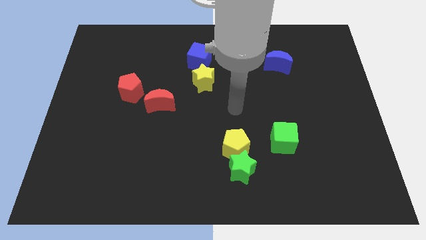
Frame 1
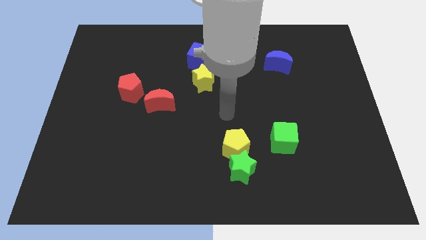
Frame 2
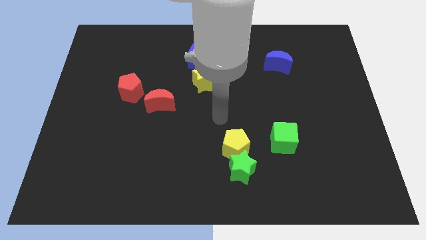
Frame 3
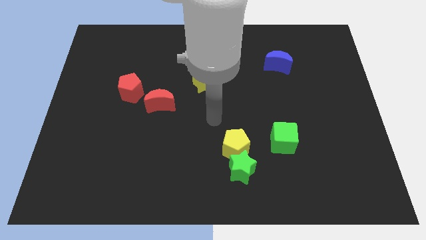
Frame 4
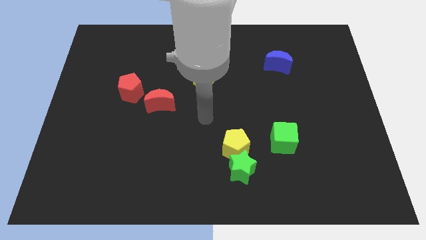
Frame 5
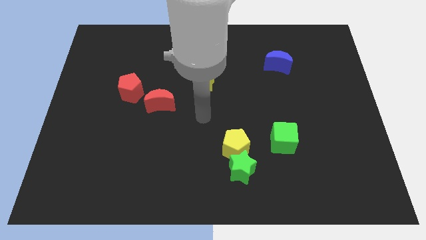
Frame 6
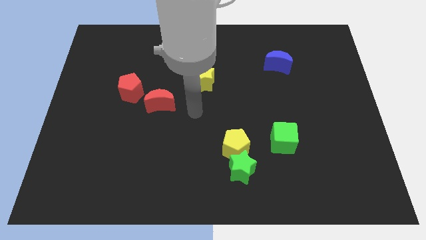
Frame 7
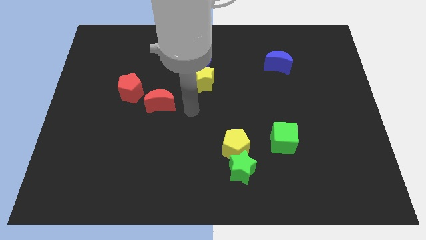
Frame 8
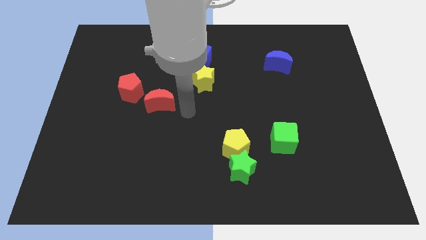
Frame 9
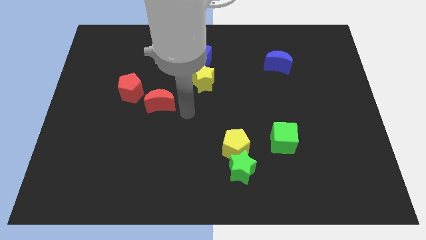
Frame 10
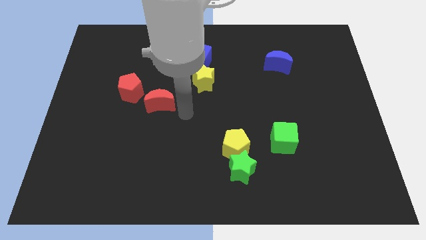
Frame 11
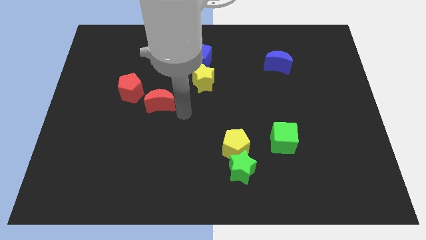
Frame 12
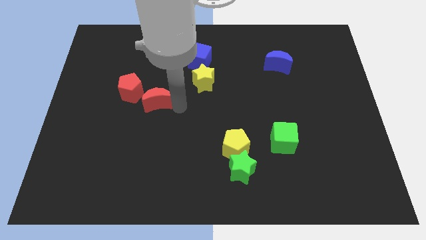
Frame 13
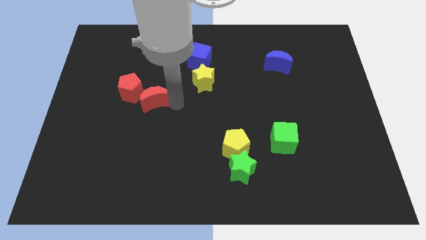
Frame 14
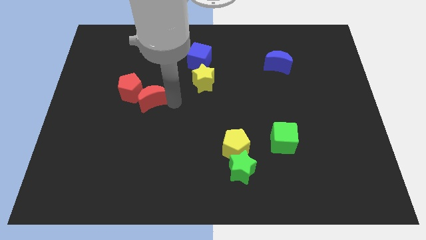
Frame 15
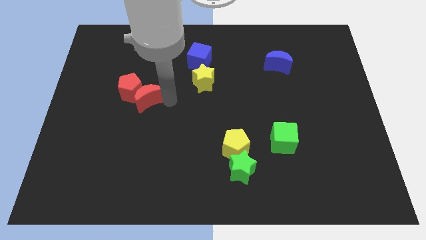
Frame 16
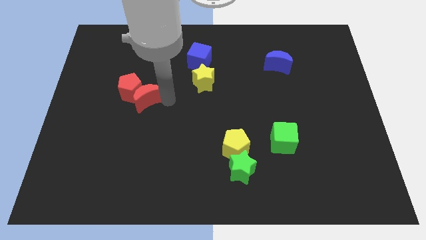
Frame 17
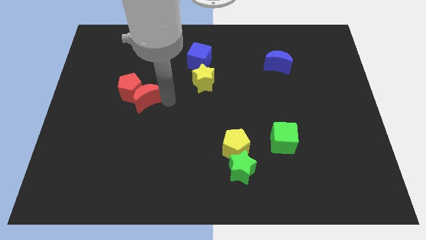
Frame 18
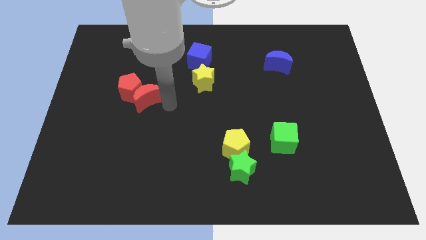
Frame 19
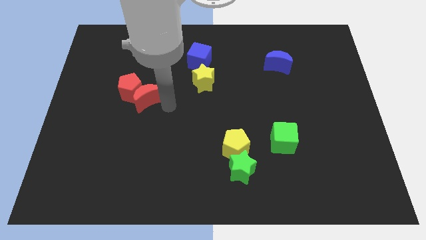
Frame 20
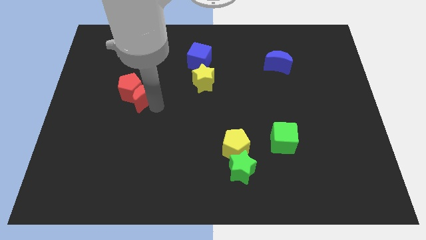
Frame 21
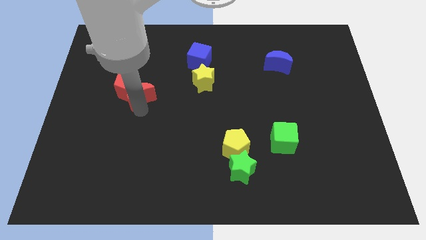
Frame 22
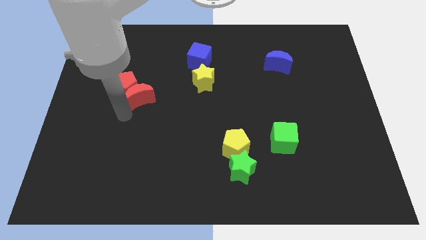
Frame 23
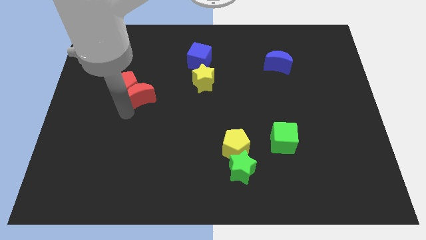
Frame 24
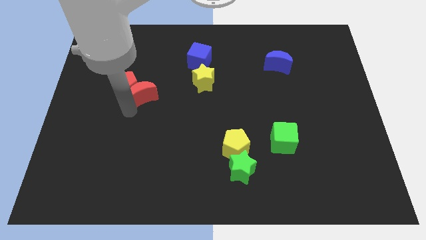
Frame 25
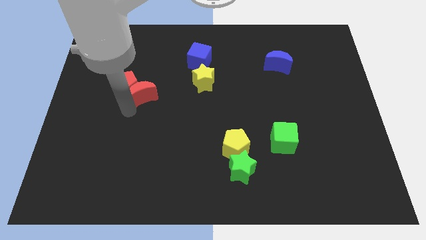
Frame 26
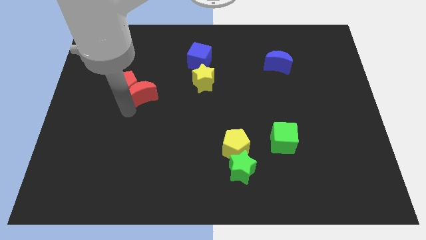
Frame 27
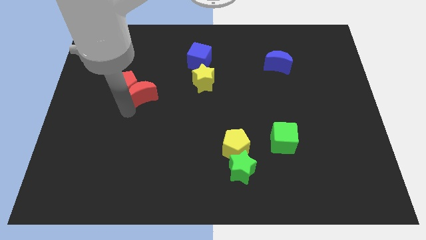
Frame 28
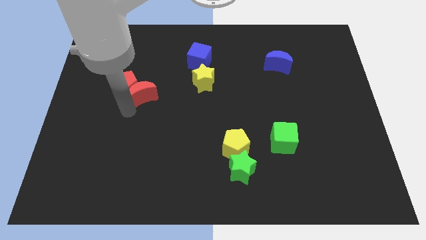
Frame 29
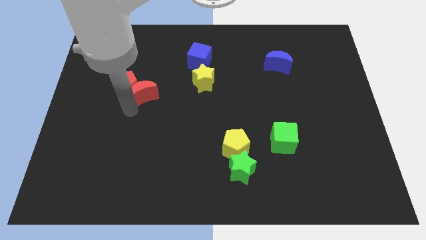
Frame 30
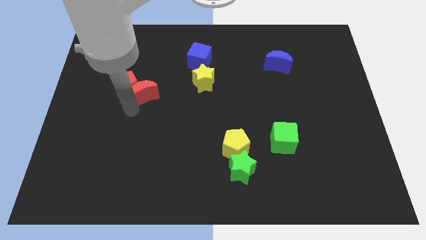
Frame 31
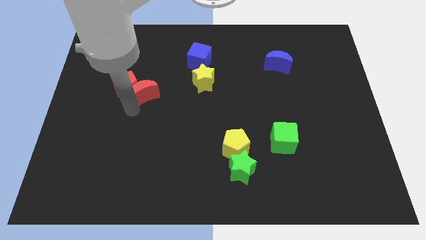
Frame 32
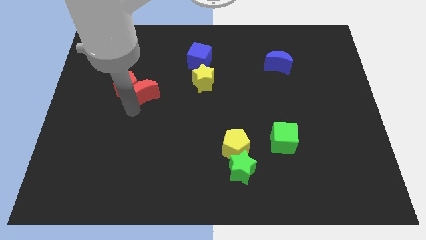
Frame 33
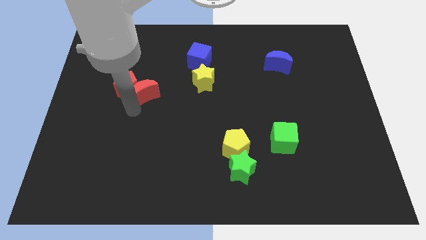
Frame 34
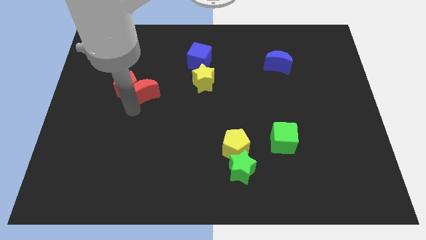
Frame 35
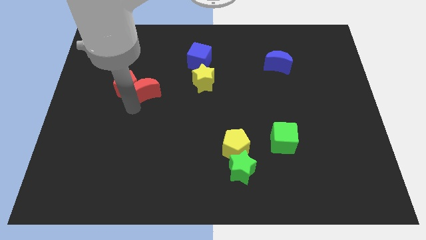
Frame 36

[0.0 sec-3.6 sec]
push the red crescent to the right of the red pentagon

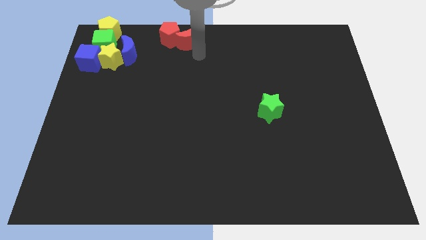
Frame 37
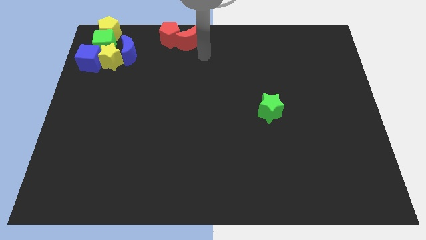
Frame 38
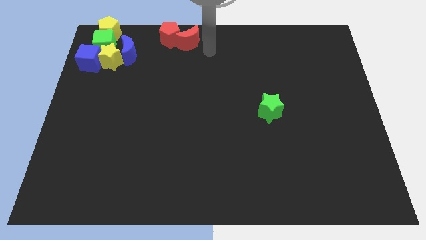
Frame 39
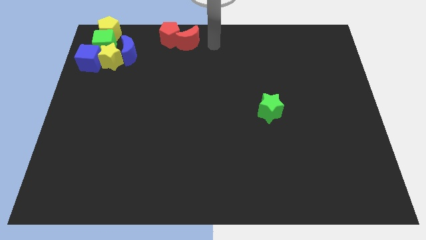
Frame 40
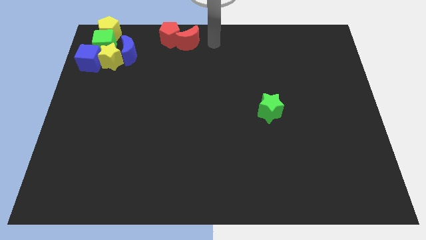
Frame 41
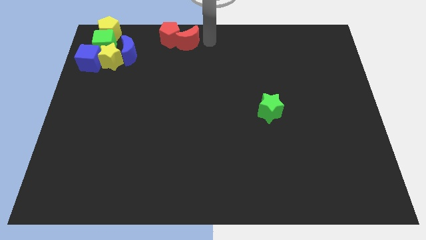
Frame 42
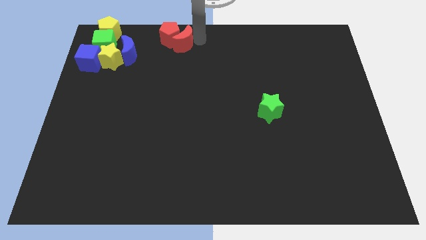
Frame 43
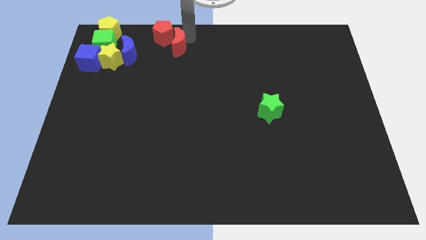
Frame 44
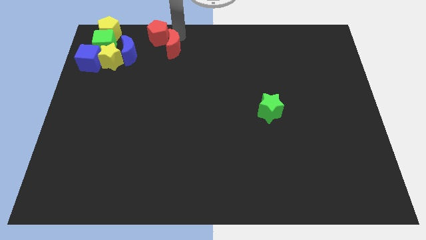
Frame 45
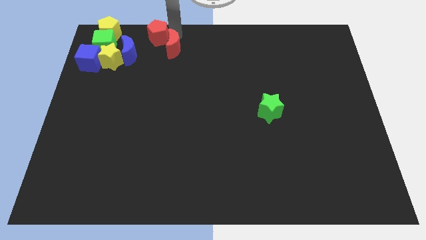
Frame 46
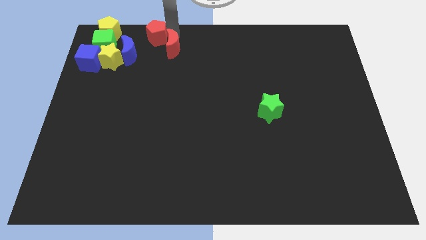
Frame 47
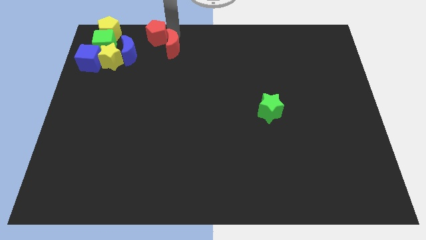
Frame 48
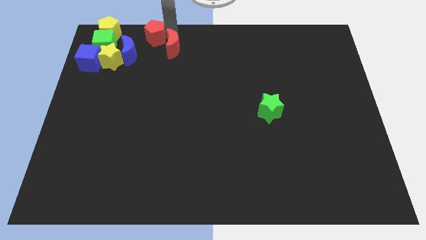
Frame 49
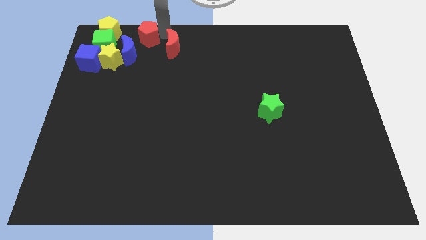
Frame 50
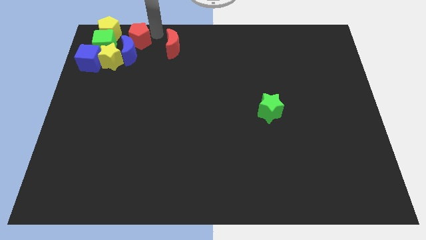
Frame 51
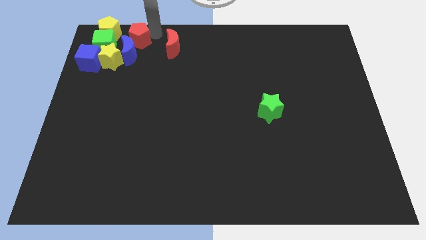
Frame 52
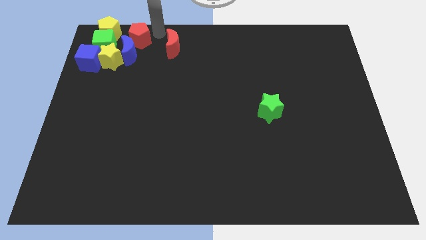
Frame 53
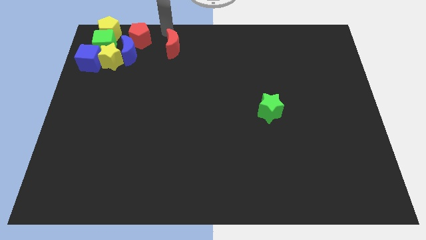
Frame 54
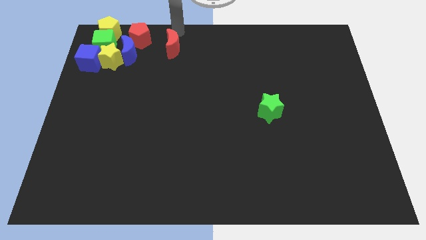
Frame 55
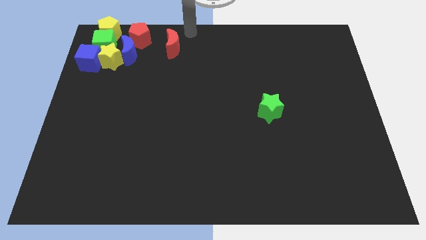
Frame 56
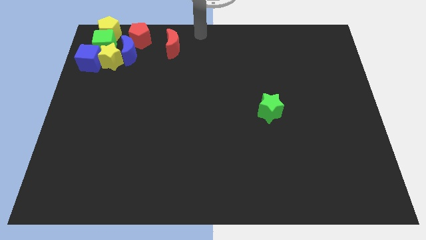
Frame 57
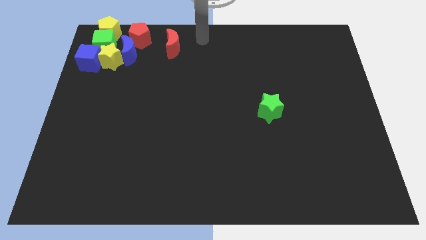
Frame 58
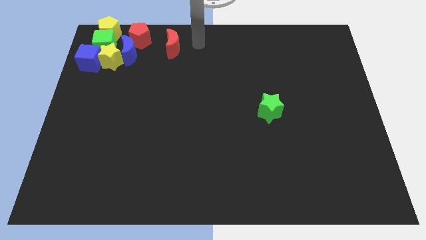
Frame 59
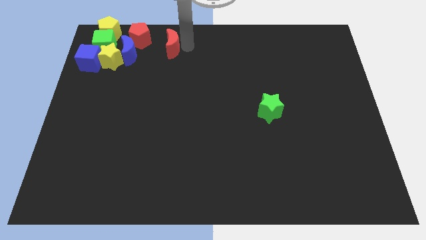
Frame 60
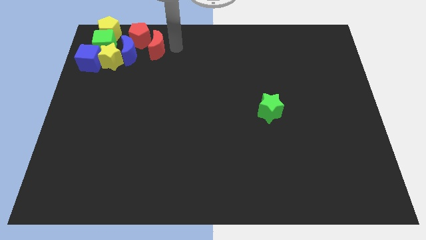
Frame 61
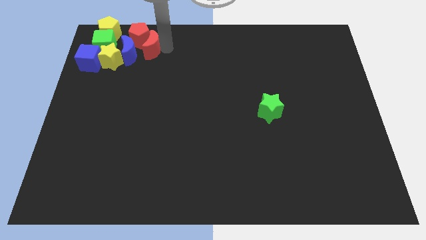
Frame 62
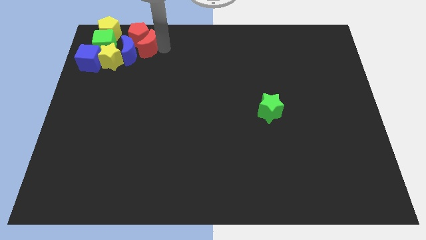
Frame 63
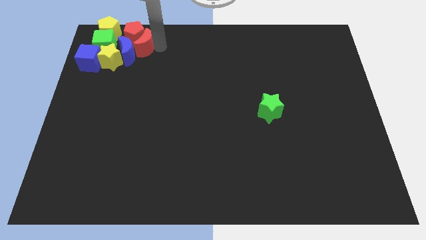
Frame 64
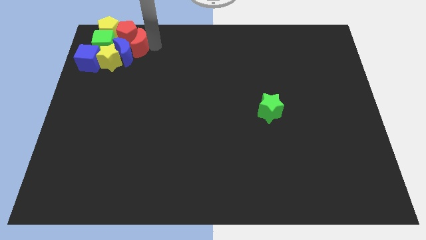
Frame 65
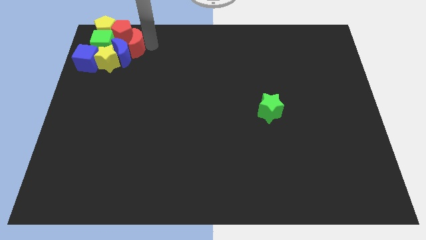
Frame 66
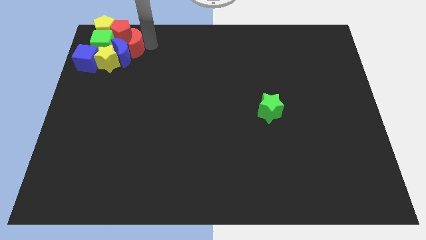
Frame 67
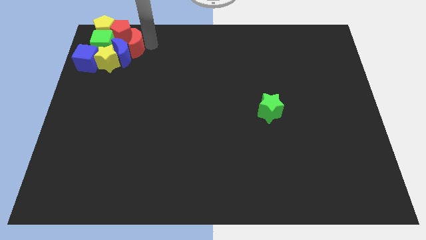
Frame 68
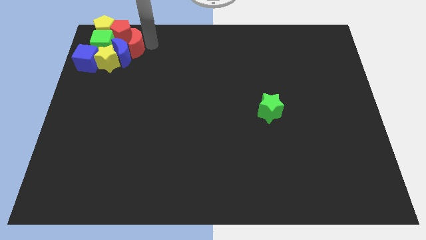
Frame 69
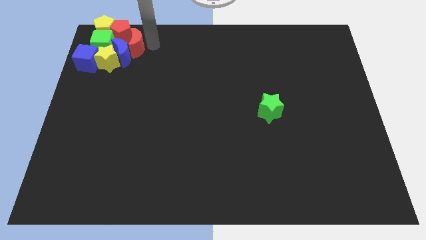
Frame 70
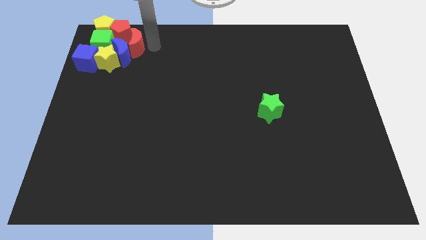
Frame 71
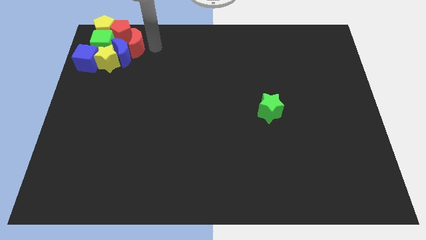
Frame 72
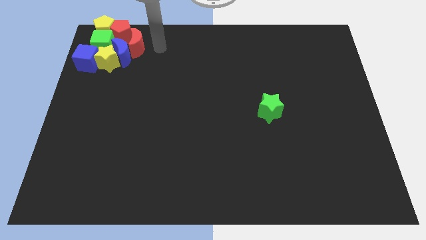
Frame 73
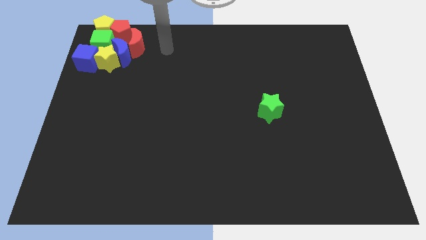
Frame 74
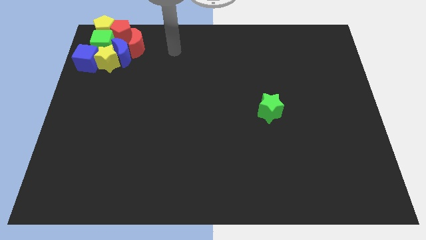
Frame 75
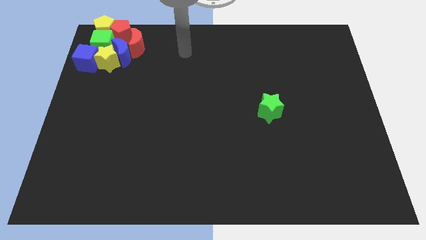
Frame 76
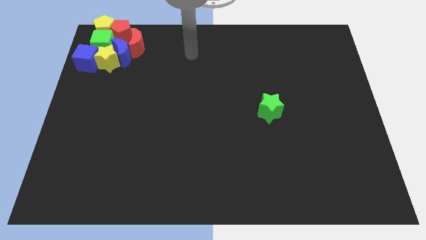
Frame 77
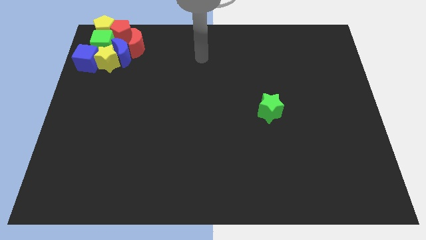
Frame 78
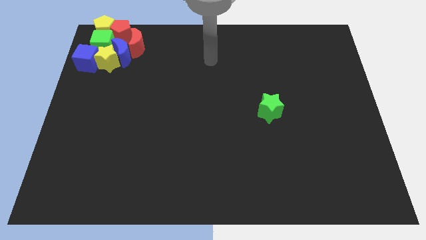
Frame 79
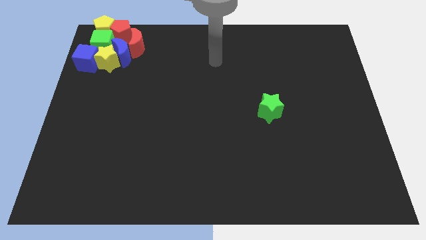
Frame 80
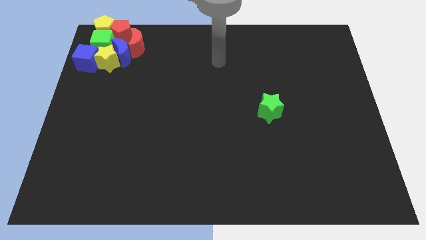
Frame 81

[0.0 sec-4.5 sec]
push the red pentagon and red crescent into the group of blocks

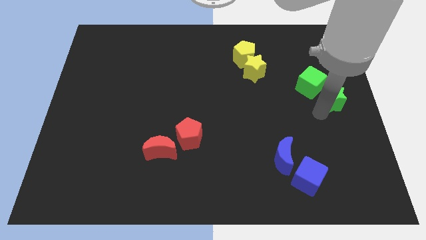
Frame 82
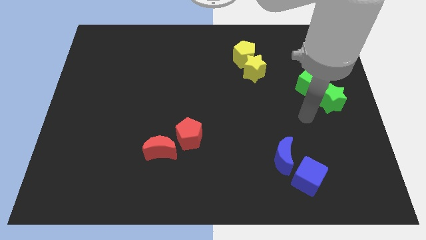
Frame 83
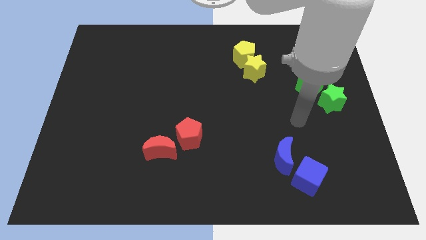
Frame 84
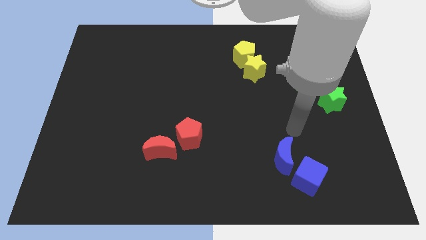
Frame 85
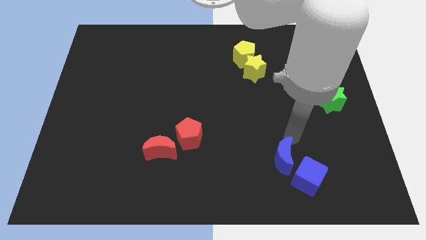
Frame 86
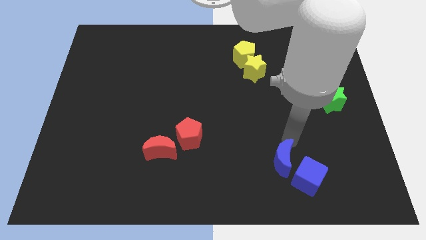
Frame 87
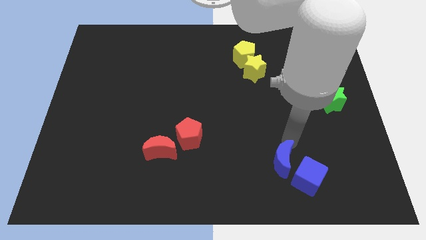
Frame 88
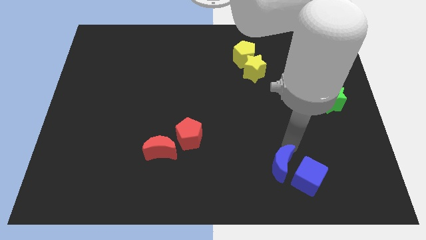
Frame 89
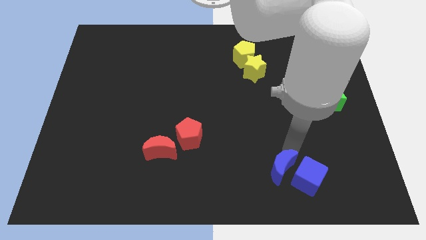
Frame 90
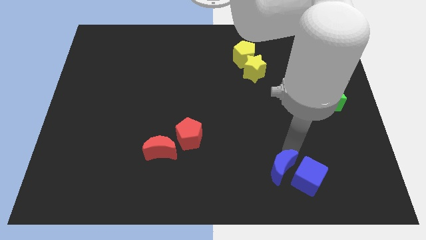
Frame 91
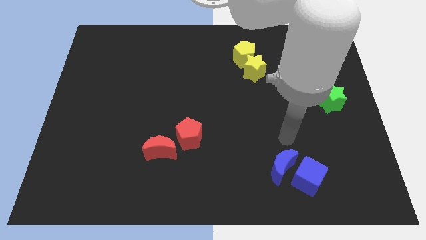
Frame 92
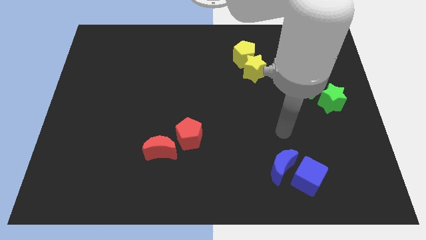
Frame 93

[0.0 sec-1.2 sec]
tap on the top of the blue moon
